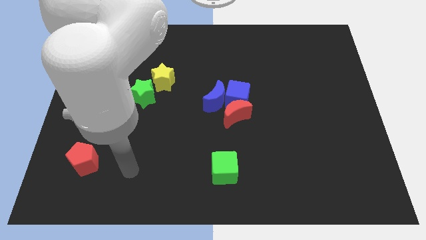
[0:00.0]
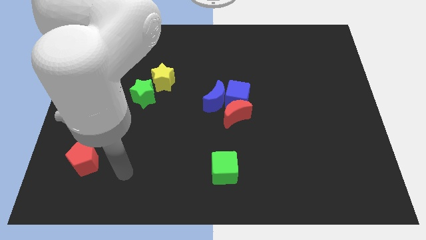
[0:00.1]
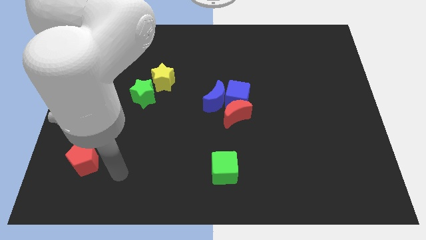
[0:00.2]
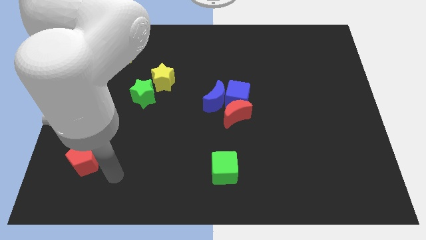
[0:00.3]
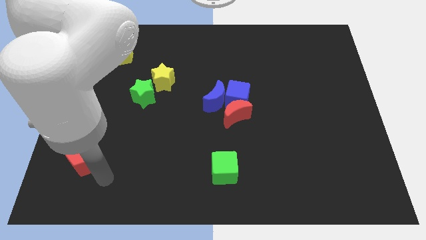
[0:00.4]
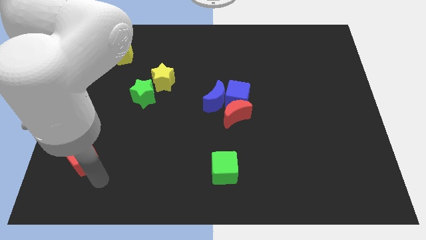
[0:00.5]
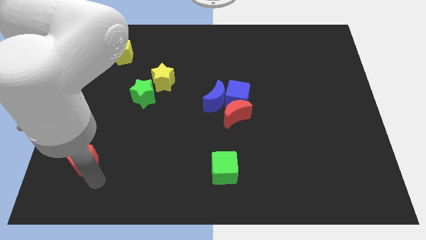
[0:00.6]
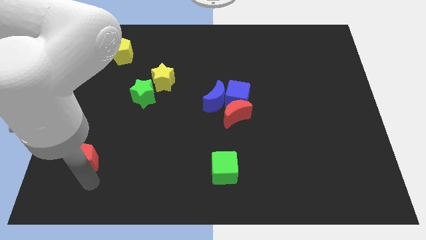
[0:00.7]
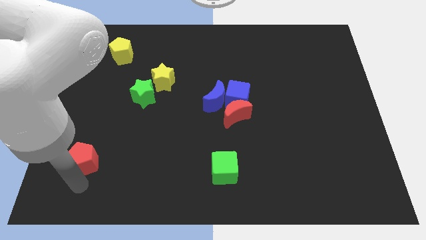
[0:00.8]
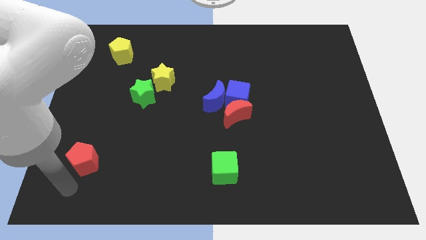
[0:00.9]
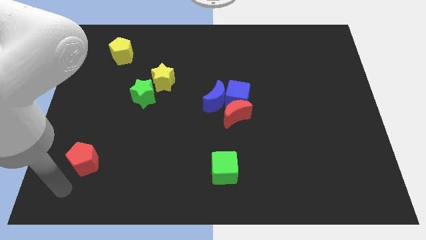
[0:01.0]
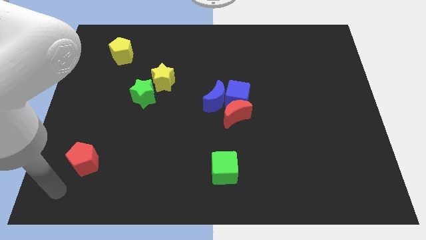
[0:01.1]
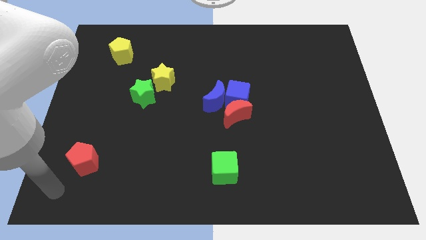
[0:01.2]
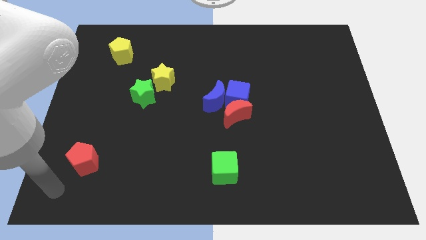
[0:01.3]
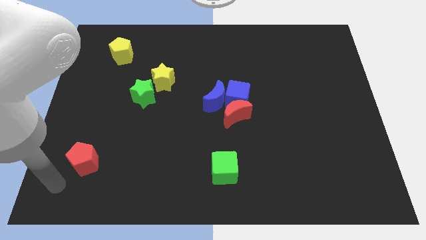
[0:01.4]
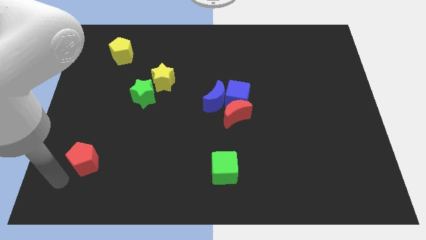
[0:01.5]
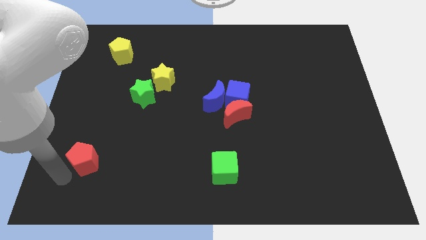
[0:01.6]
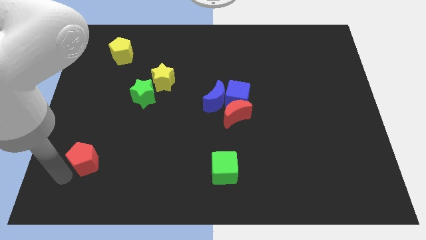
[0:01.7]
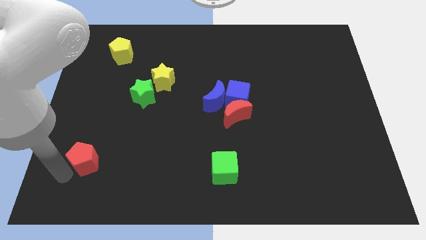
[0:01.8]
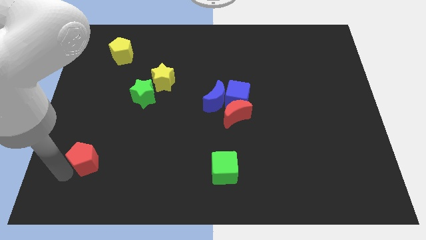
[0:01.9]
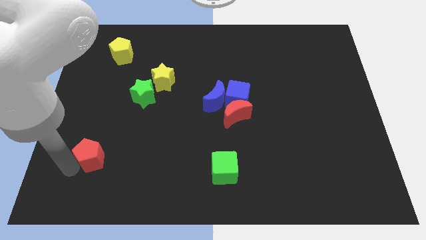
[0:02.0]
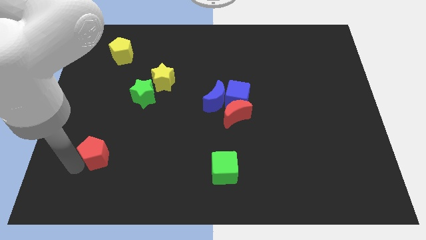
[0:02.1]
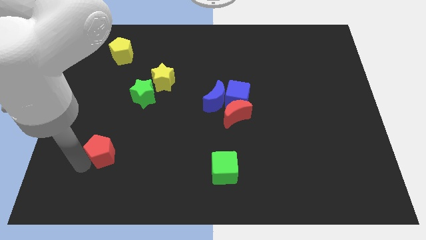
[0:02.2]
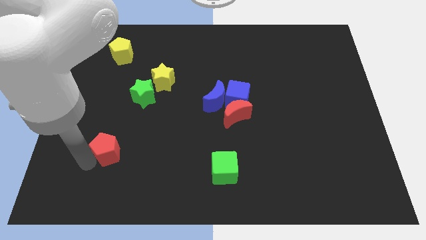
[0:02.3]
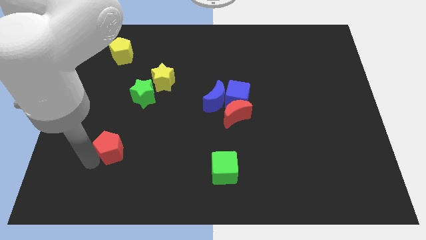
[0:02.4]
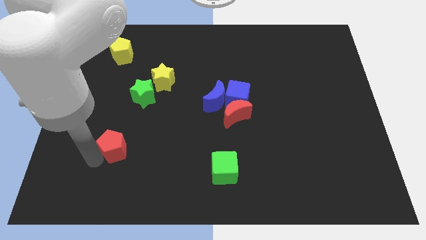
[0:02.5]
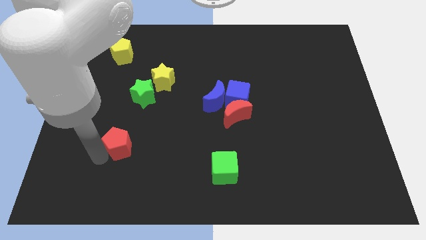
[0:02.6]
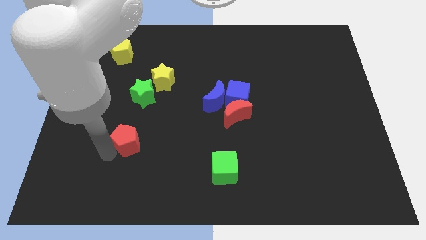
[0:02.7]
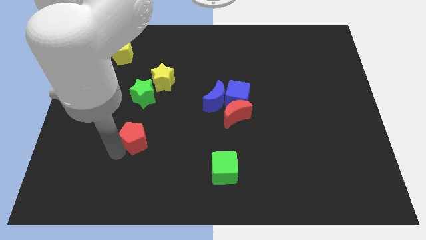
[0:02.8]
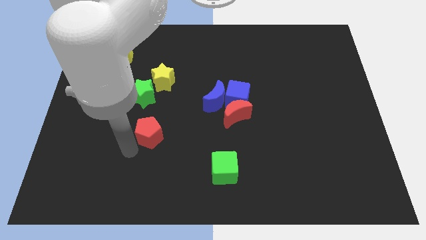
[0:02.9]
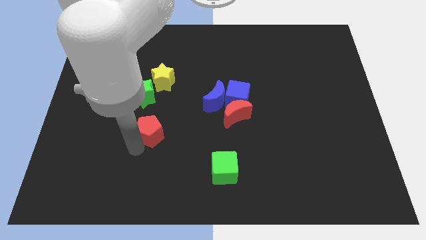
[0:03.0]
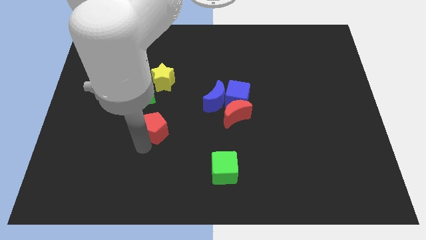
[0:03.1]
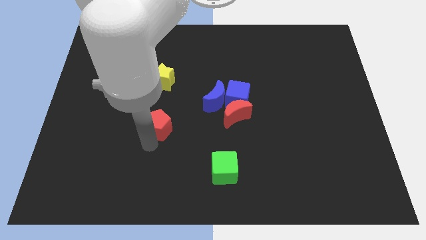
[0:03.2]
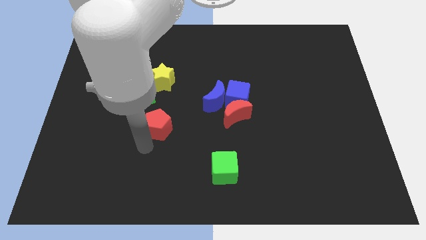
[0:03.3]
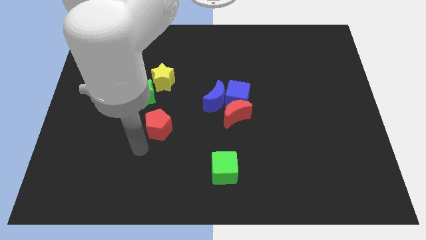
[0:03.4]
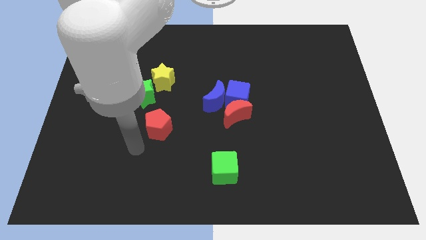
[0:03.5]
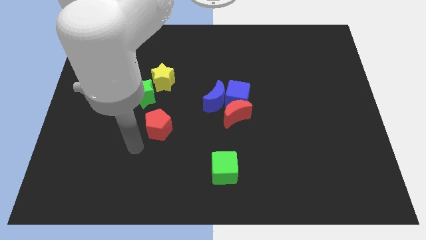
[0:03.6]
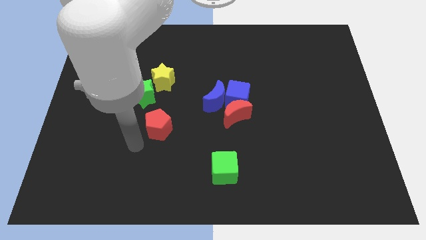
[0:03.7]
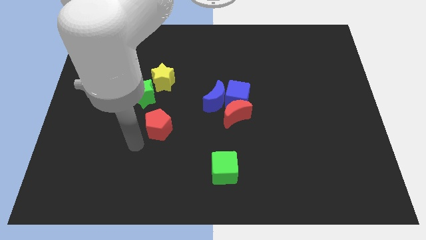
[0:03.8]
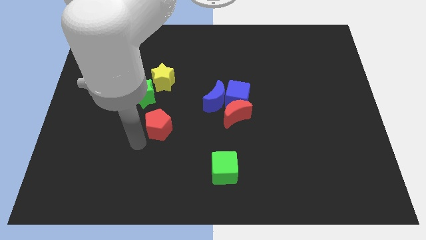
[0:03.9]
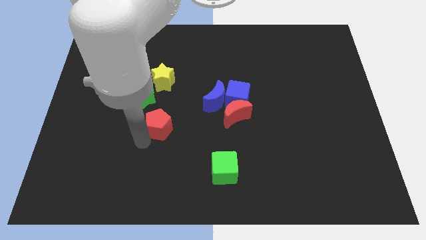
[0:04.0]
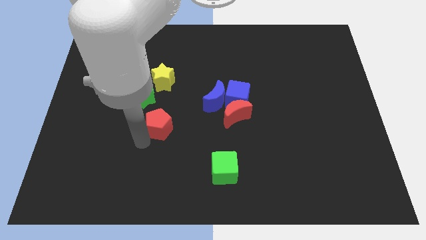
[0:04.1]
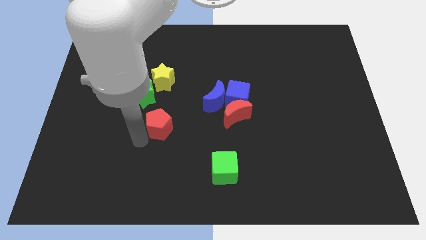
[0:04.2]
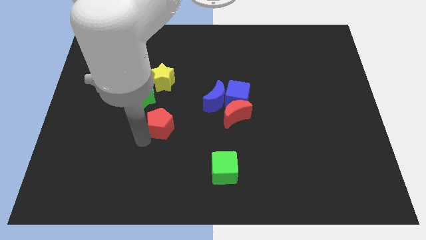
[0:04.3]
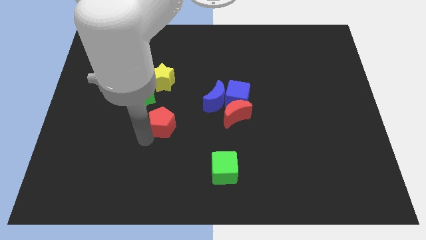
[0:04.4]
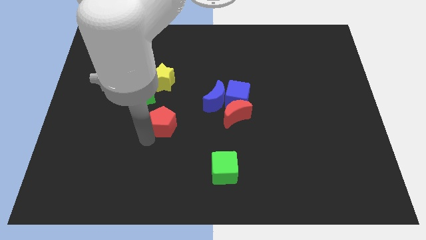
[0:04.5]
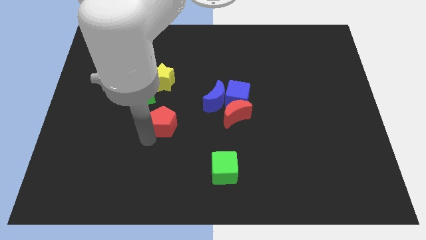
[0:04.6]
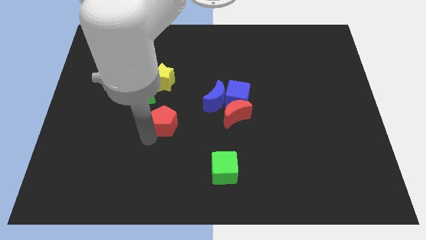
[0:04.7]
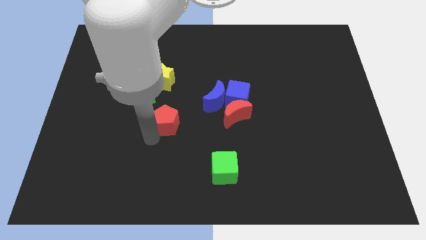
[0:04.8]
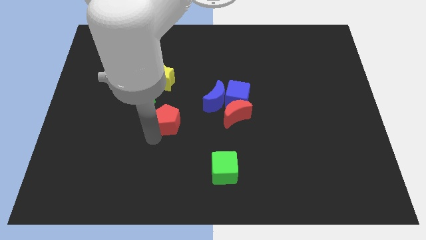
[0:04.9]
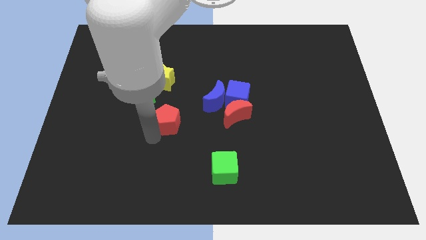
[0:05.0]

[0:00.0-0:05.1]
push the red pentagon to the center of the board

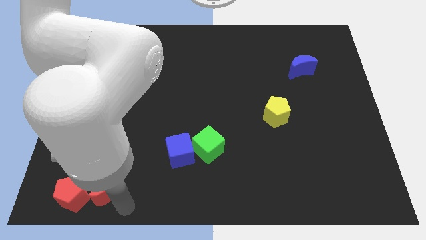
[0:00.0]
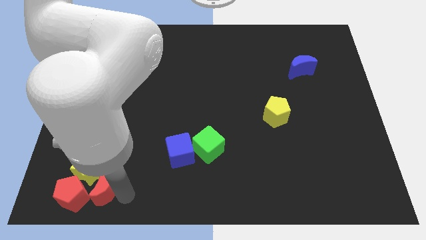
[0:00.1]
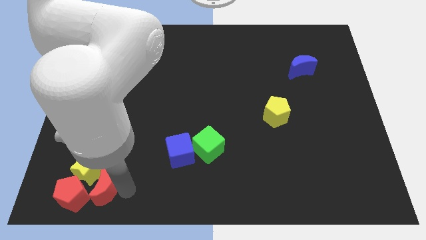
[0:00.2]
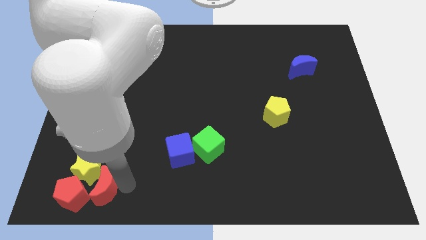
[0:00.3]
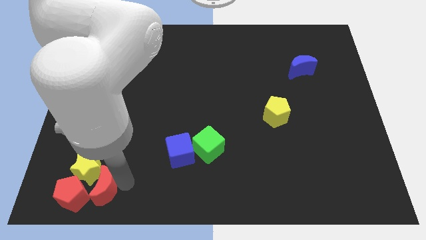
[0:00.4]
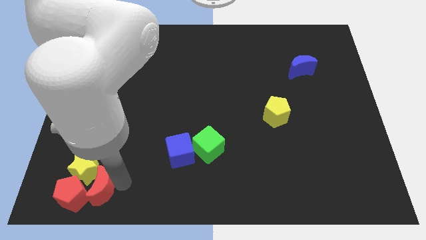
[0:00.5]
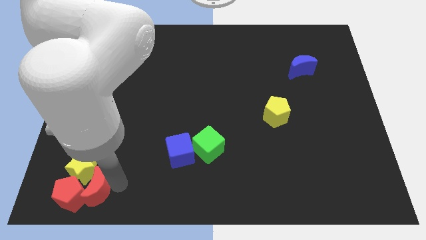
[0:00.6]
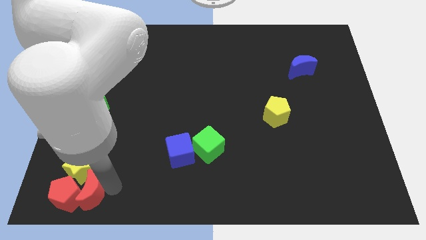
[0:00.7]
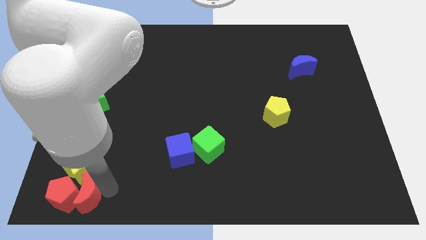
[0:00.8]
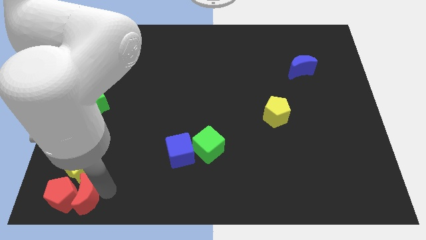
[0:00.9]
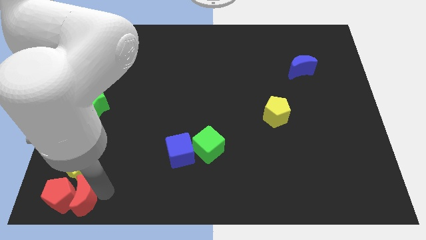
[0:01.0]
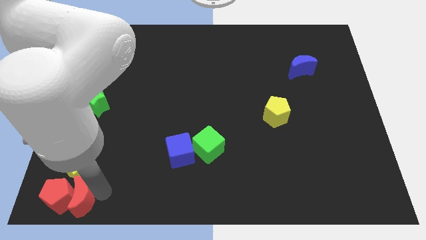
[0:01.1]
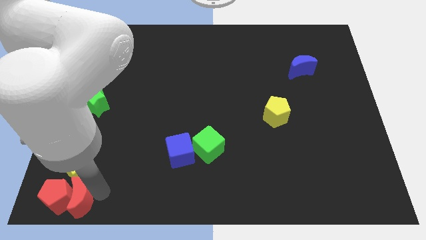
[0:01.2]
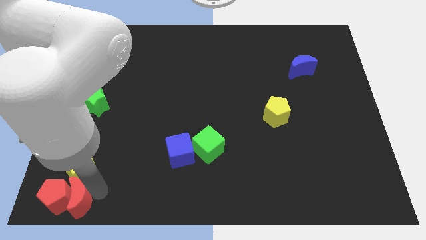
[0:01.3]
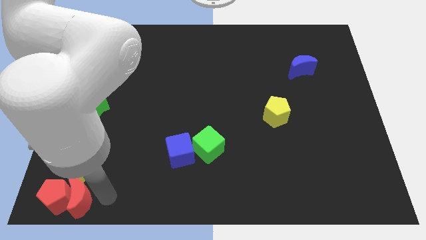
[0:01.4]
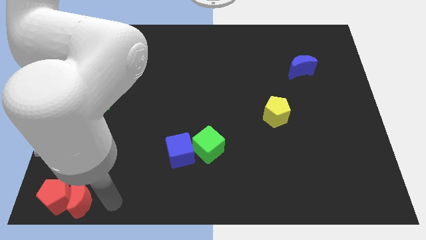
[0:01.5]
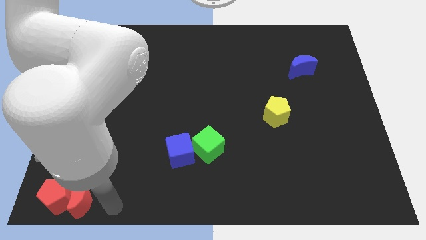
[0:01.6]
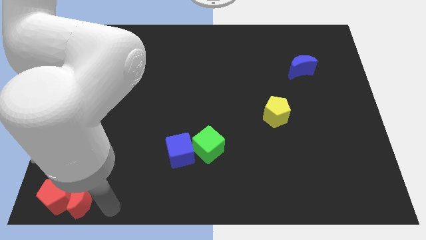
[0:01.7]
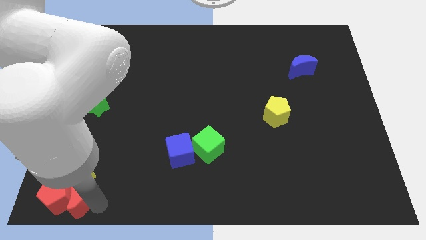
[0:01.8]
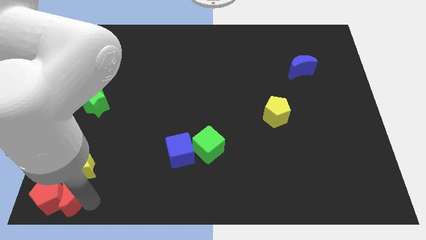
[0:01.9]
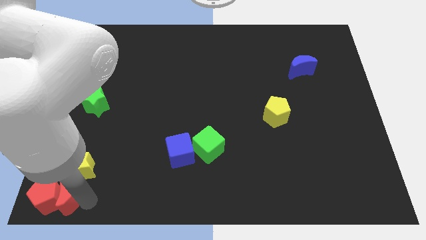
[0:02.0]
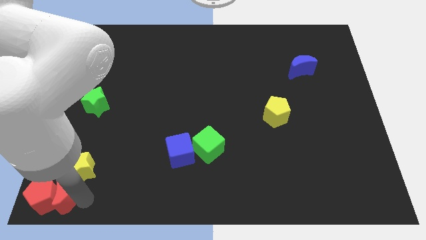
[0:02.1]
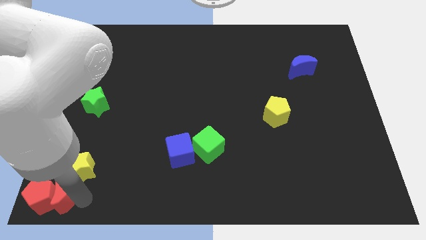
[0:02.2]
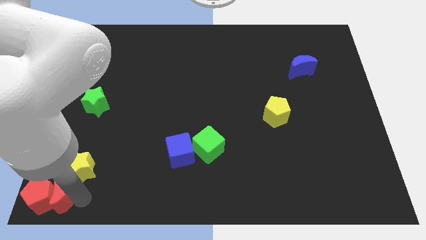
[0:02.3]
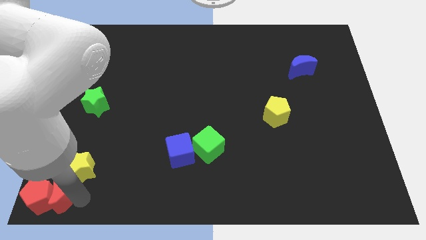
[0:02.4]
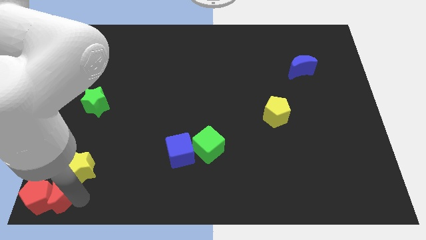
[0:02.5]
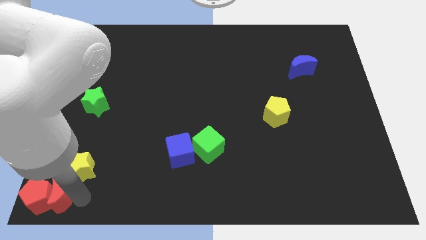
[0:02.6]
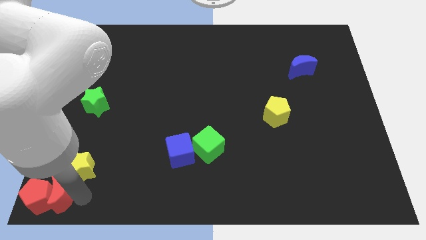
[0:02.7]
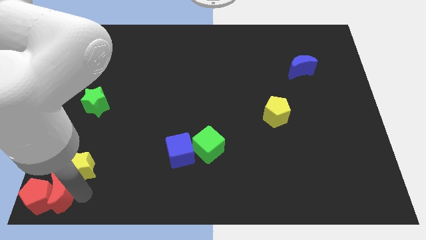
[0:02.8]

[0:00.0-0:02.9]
drag red moon along with red pentagon towards left of the board

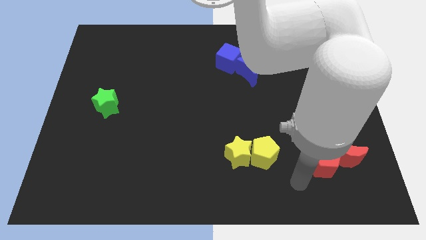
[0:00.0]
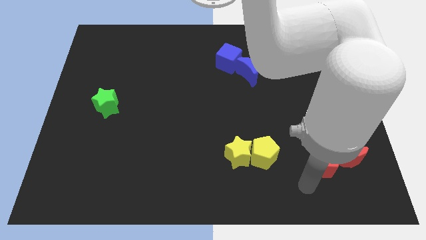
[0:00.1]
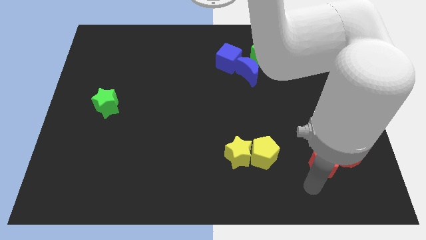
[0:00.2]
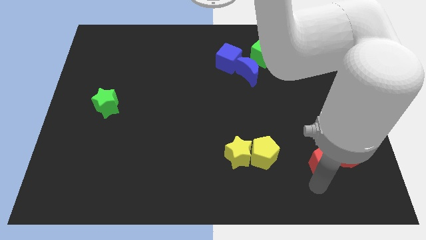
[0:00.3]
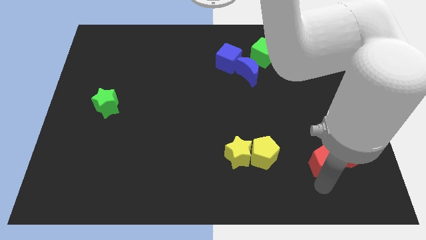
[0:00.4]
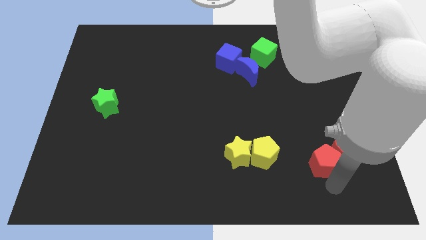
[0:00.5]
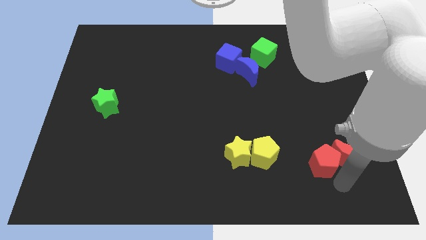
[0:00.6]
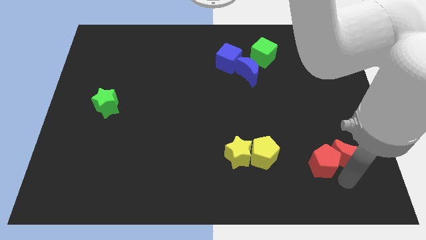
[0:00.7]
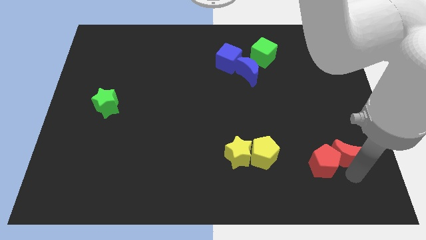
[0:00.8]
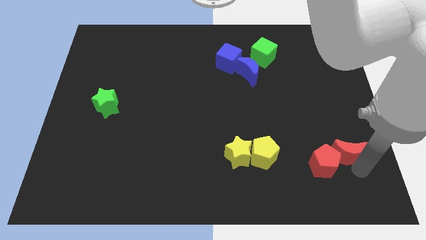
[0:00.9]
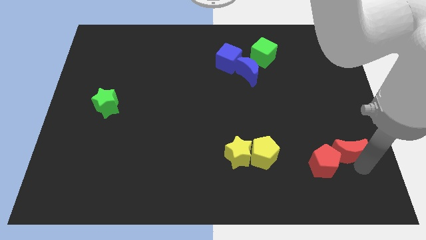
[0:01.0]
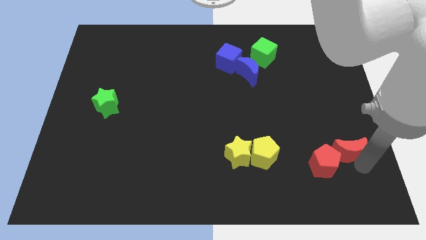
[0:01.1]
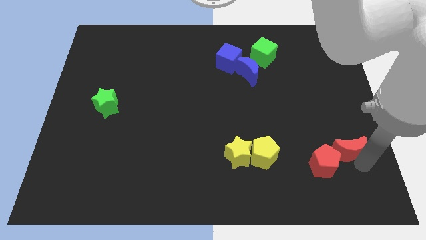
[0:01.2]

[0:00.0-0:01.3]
slightly touch the red crescent
